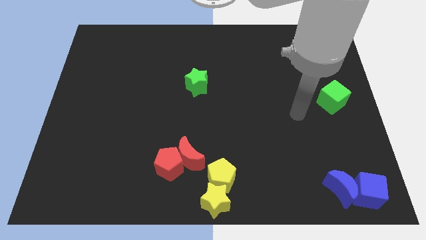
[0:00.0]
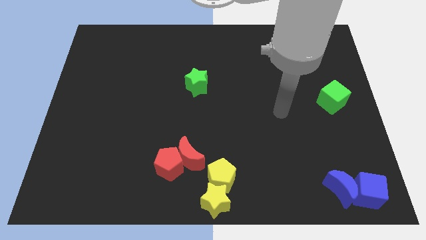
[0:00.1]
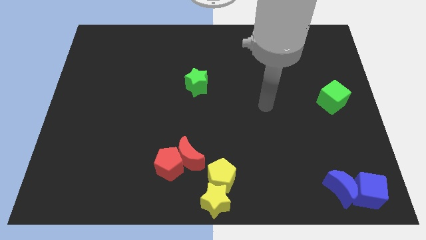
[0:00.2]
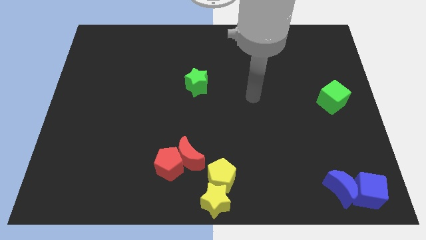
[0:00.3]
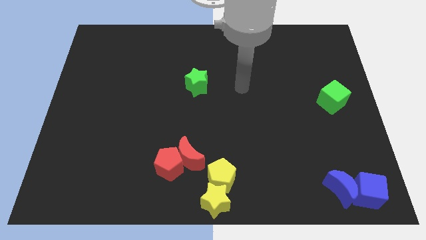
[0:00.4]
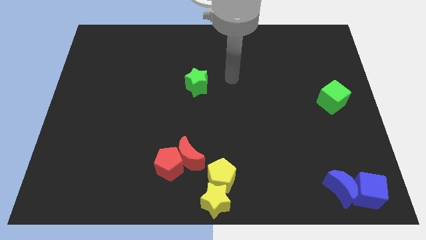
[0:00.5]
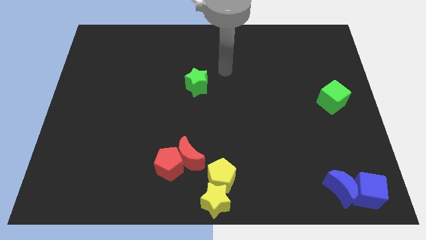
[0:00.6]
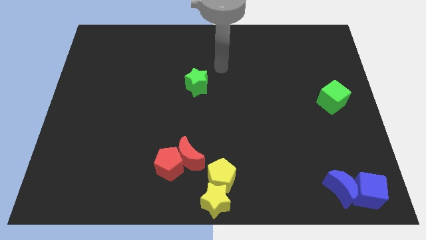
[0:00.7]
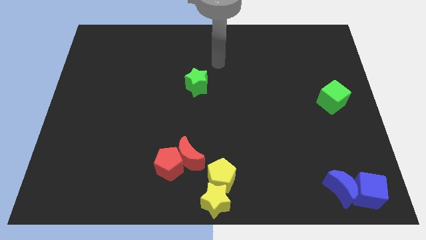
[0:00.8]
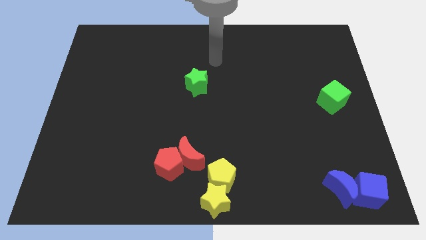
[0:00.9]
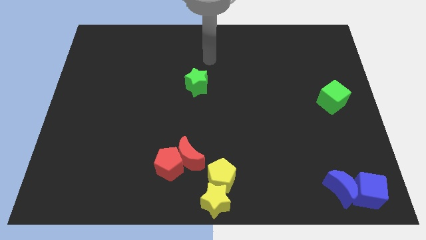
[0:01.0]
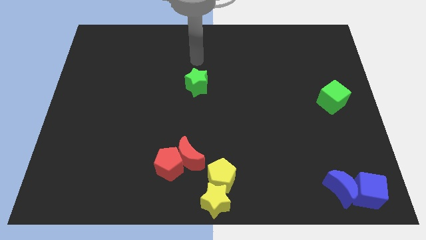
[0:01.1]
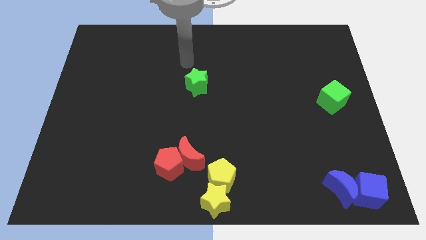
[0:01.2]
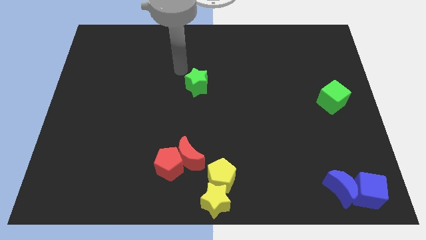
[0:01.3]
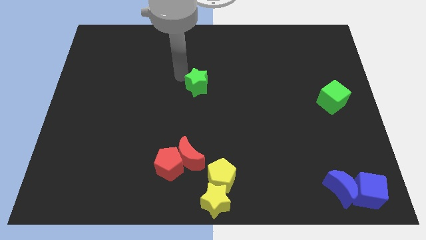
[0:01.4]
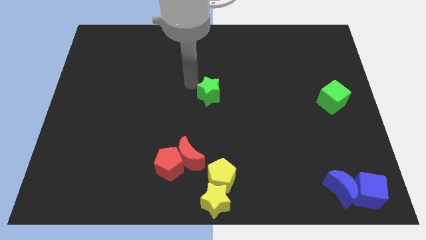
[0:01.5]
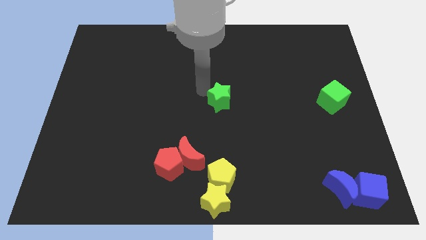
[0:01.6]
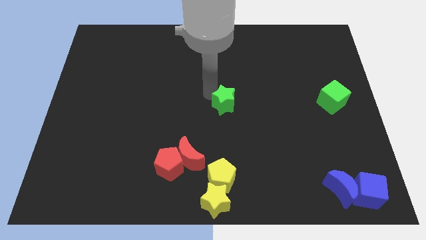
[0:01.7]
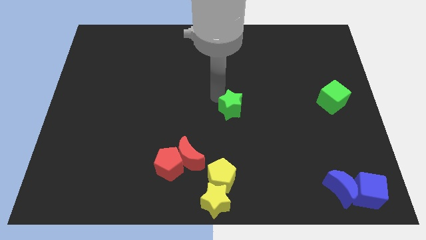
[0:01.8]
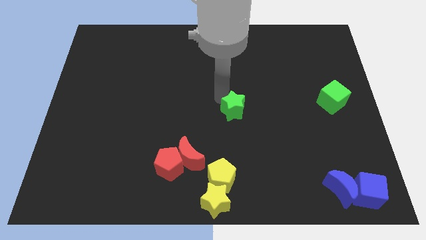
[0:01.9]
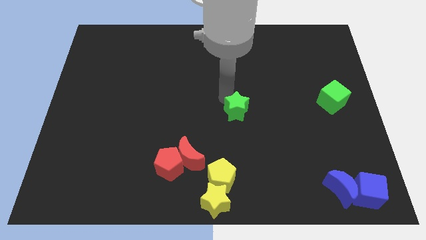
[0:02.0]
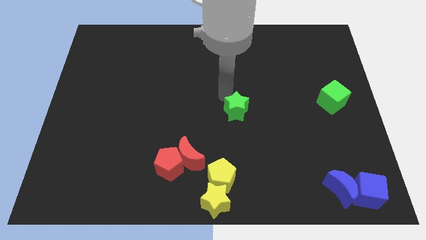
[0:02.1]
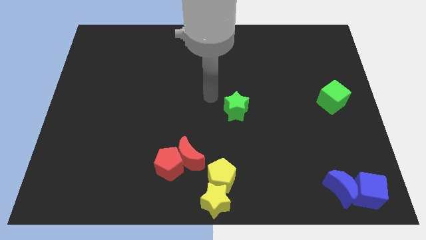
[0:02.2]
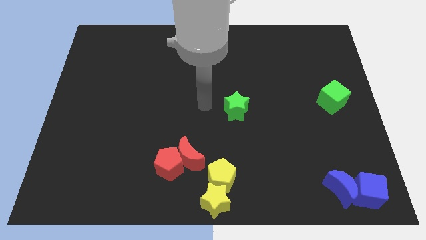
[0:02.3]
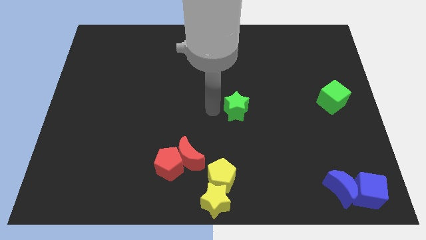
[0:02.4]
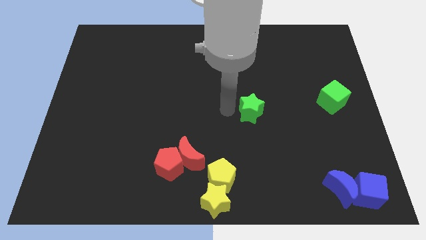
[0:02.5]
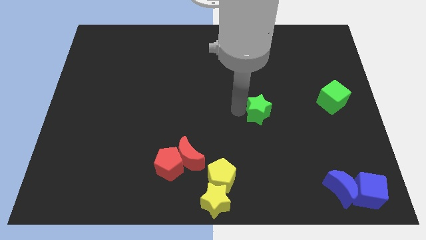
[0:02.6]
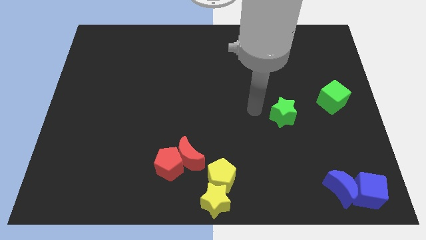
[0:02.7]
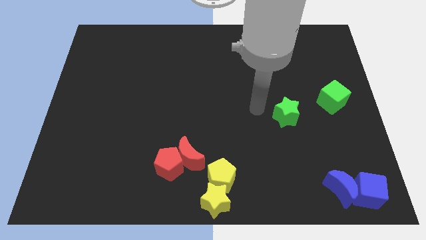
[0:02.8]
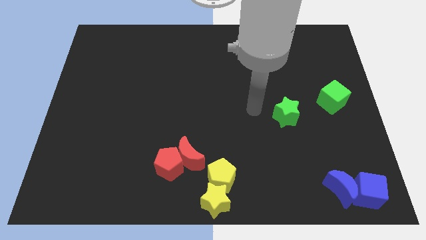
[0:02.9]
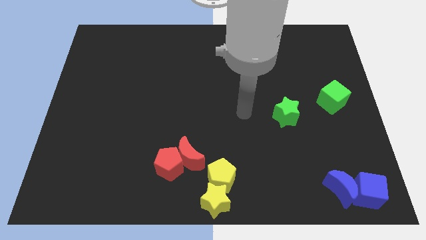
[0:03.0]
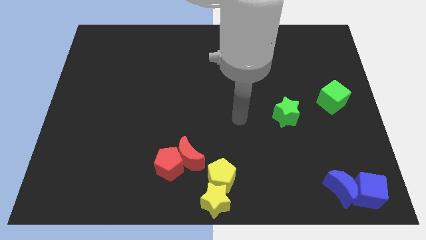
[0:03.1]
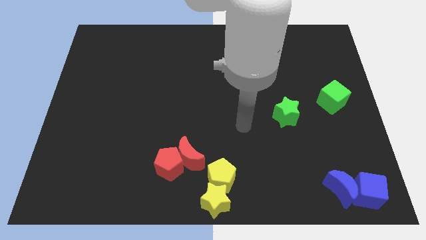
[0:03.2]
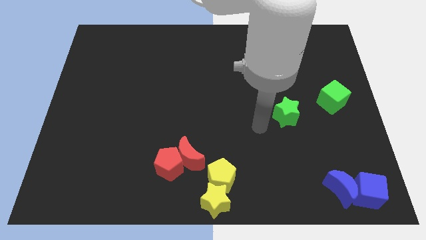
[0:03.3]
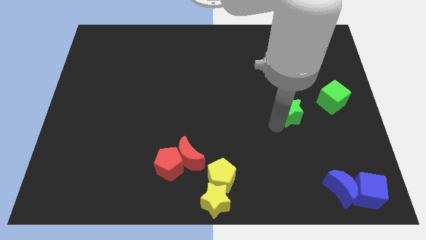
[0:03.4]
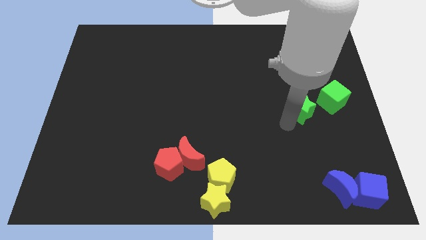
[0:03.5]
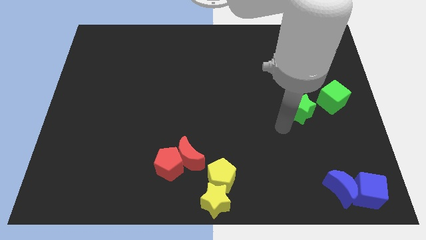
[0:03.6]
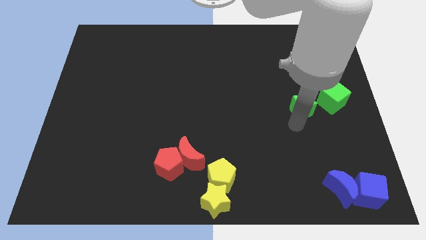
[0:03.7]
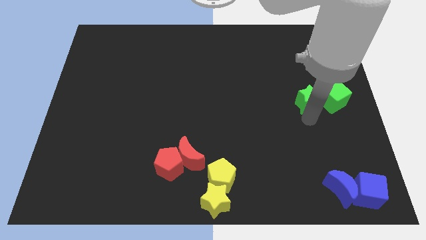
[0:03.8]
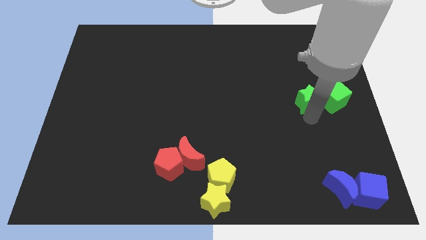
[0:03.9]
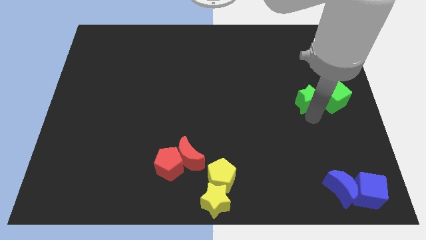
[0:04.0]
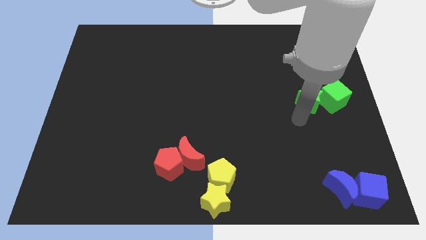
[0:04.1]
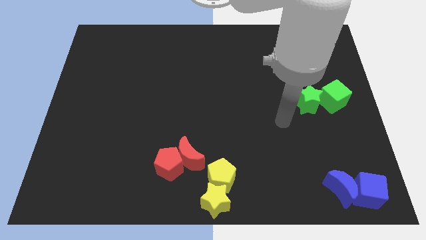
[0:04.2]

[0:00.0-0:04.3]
push the green star into the green cube

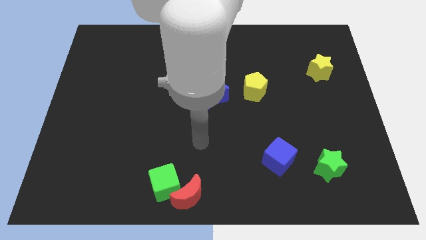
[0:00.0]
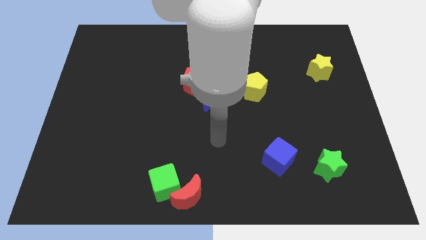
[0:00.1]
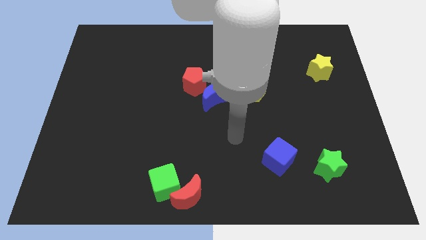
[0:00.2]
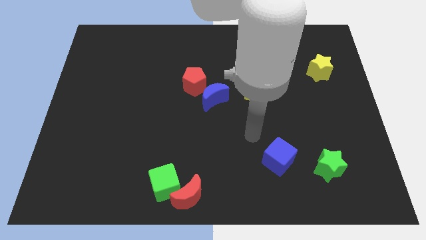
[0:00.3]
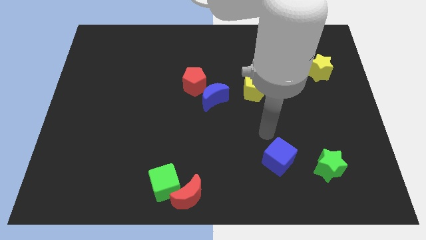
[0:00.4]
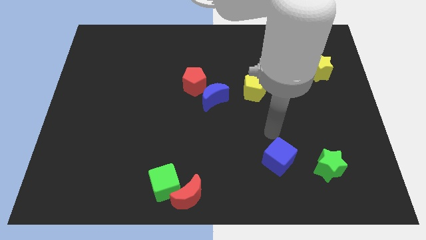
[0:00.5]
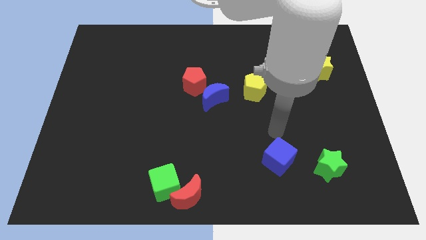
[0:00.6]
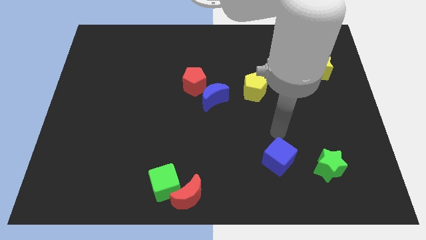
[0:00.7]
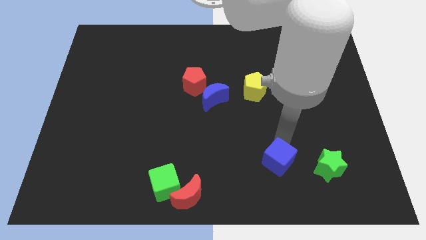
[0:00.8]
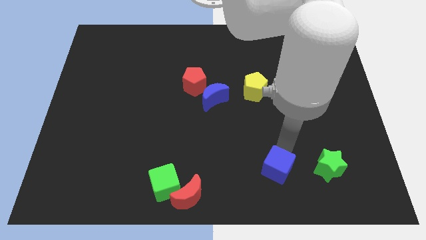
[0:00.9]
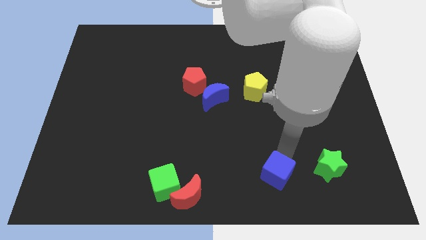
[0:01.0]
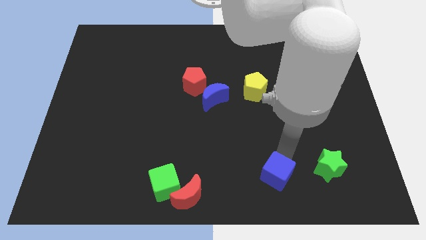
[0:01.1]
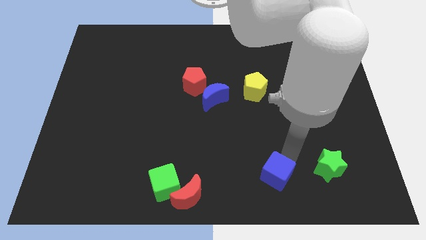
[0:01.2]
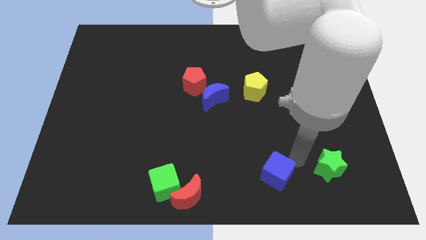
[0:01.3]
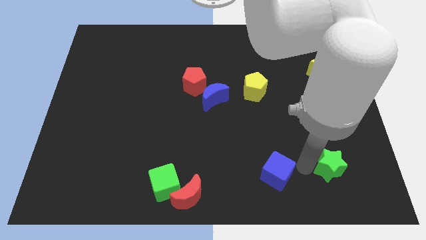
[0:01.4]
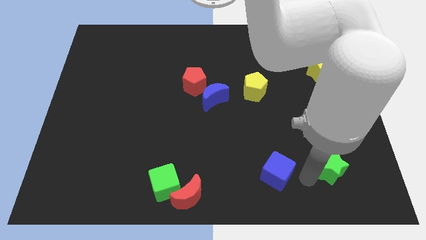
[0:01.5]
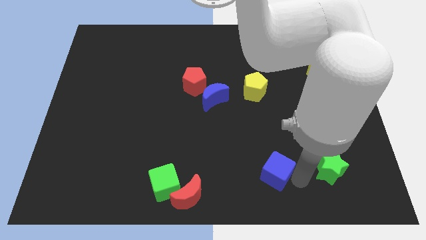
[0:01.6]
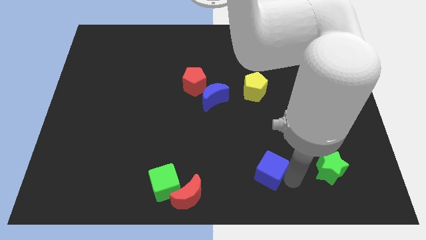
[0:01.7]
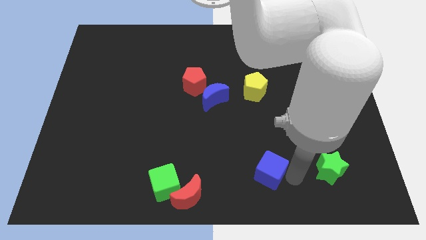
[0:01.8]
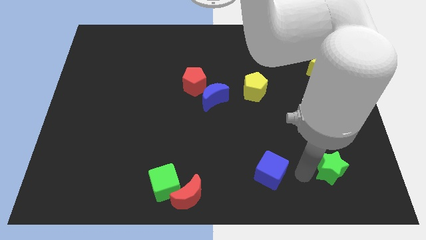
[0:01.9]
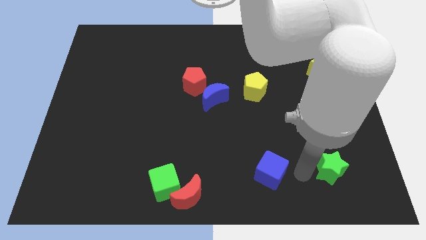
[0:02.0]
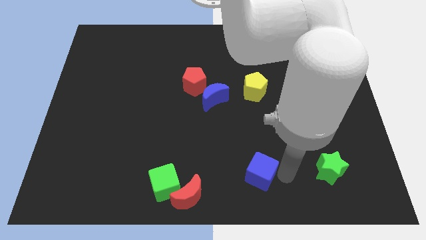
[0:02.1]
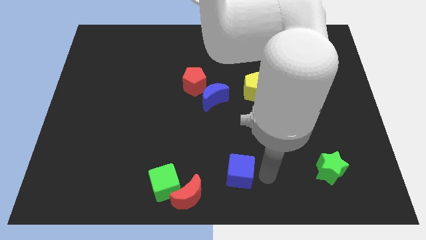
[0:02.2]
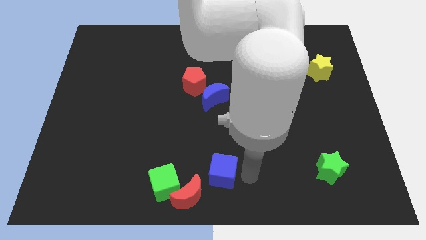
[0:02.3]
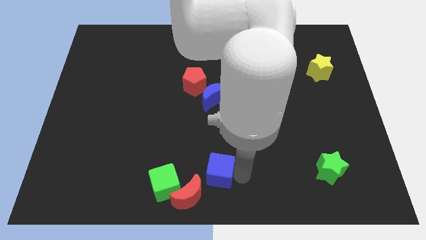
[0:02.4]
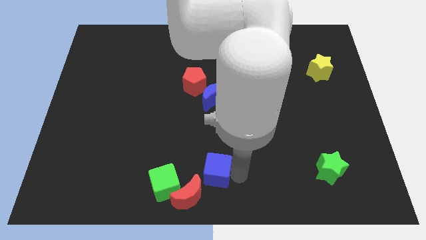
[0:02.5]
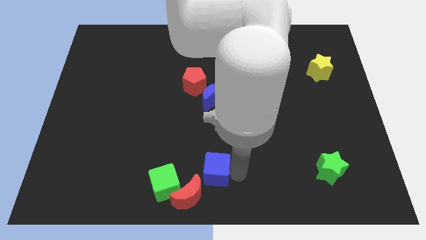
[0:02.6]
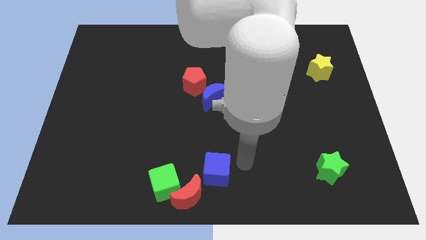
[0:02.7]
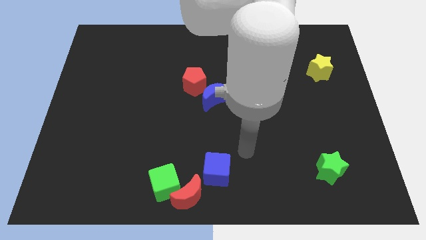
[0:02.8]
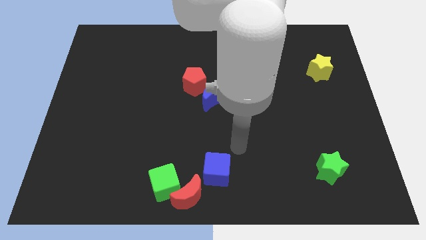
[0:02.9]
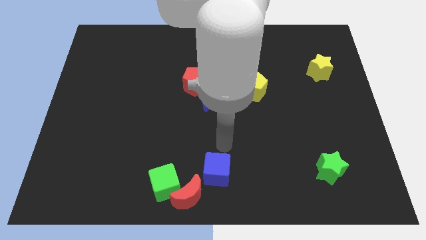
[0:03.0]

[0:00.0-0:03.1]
drag the blue cube diagonally bottom left to the yellow pentagon

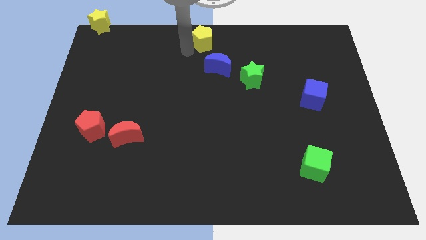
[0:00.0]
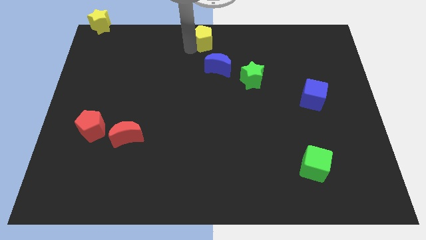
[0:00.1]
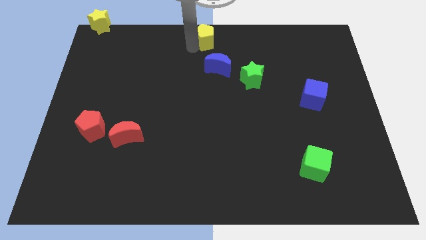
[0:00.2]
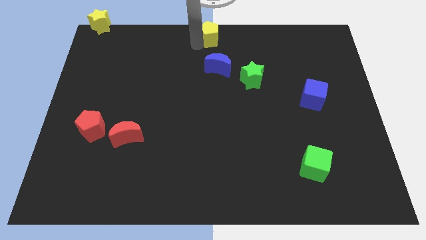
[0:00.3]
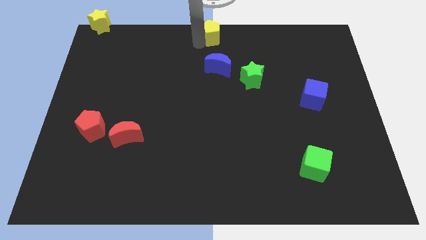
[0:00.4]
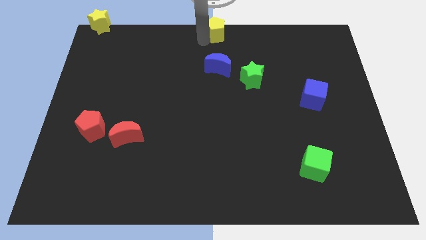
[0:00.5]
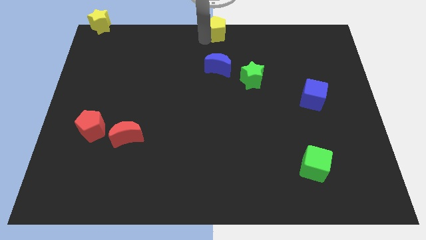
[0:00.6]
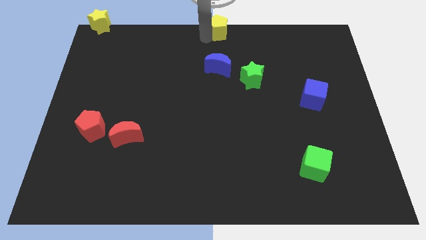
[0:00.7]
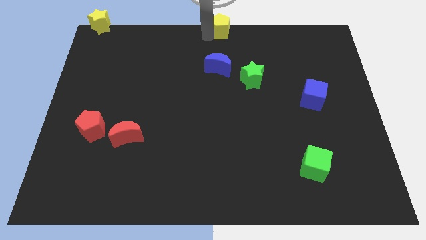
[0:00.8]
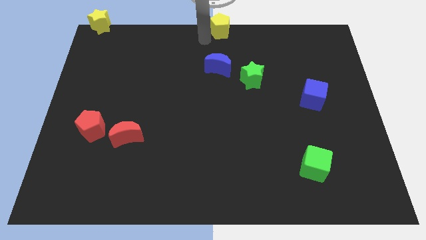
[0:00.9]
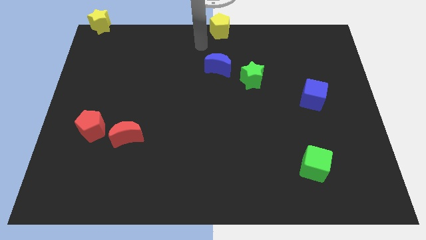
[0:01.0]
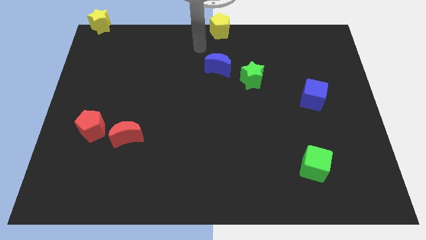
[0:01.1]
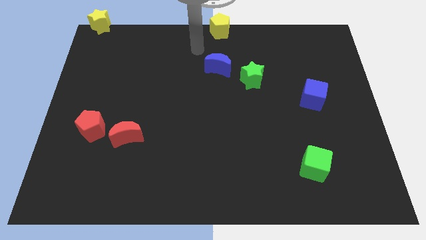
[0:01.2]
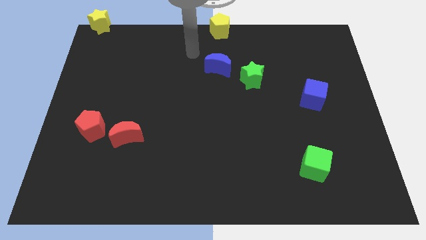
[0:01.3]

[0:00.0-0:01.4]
put the yellow pentagon parallel to the yellow star
